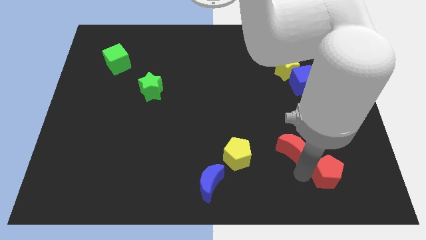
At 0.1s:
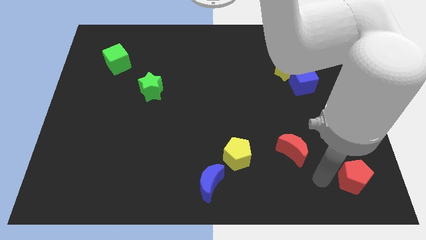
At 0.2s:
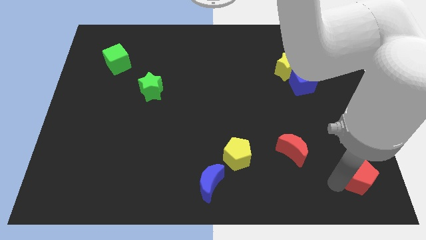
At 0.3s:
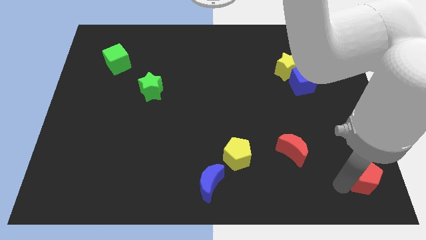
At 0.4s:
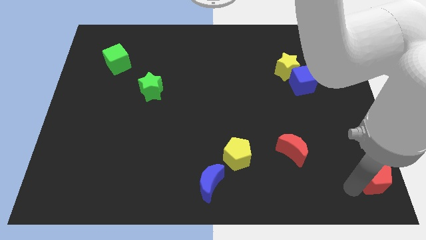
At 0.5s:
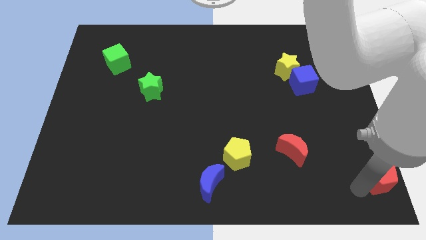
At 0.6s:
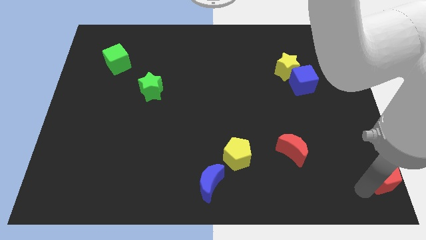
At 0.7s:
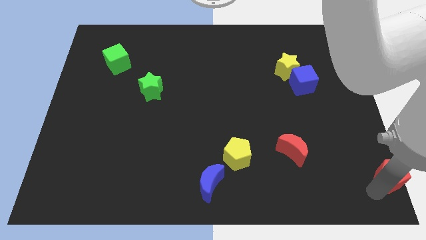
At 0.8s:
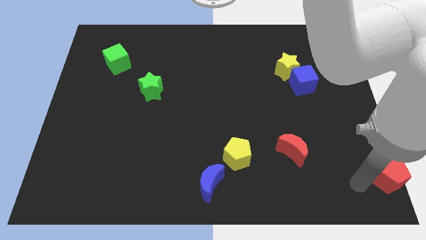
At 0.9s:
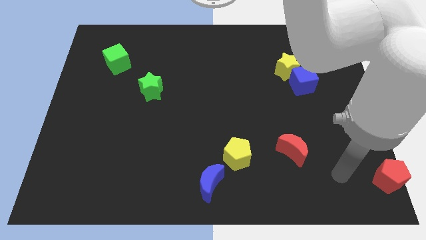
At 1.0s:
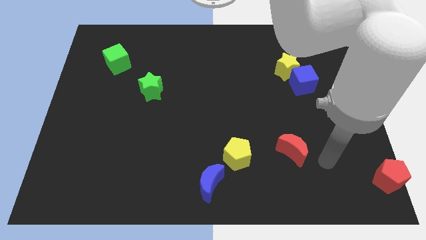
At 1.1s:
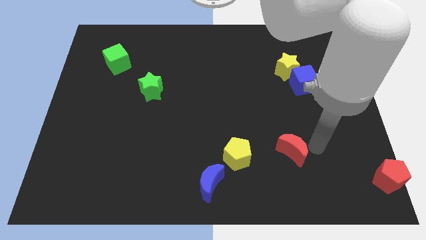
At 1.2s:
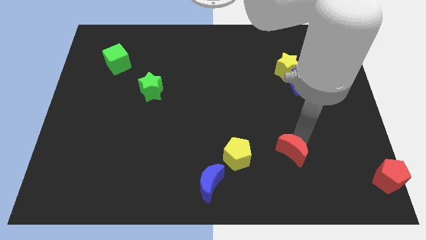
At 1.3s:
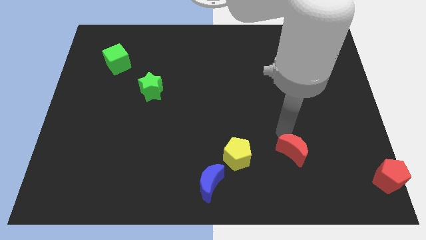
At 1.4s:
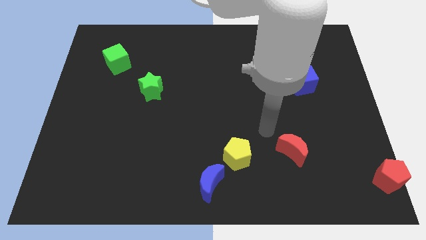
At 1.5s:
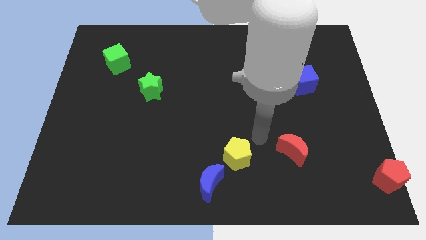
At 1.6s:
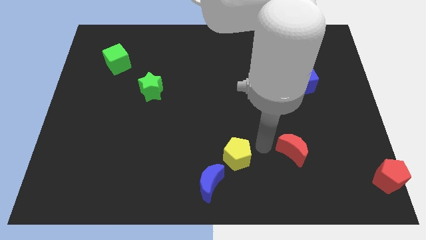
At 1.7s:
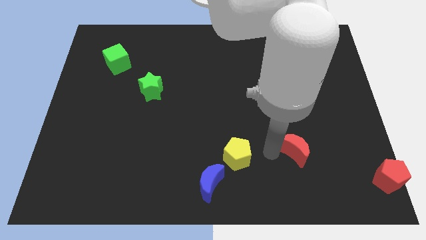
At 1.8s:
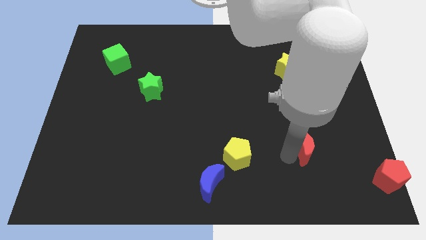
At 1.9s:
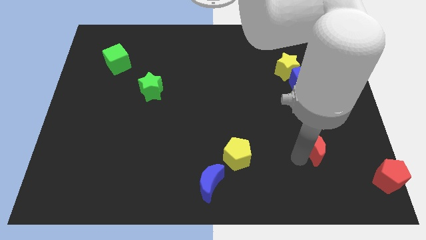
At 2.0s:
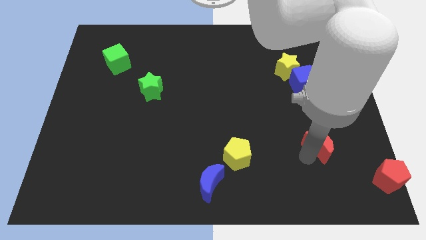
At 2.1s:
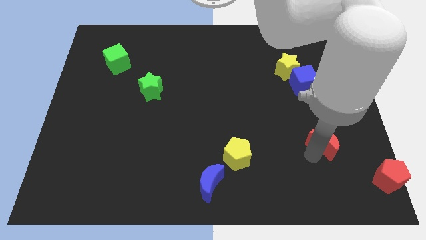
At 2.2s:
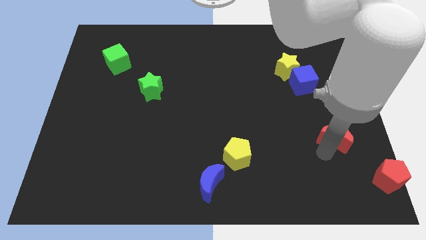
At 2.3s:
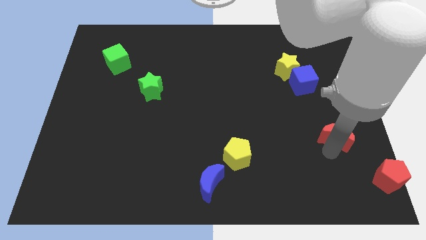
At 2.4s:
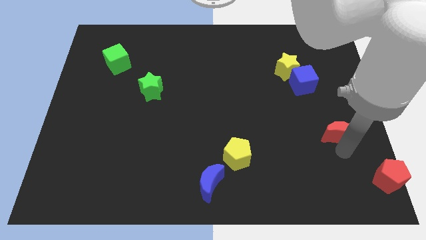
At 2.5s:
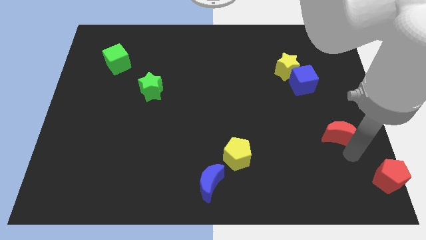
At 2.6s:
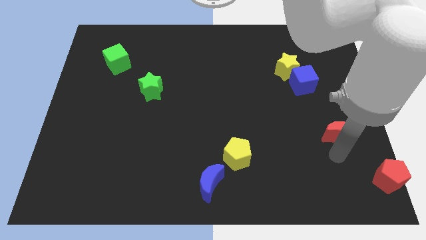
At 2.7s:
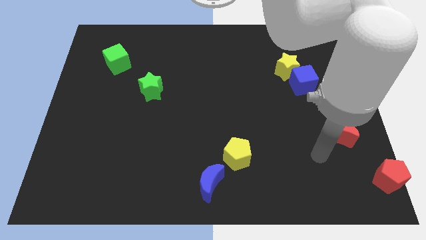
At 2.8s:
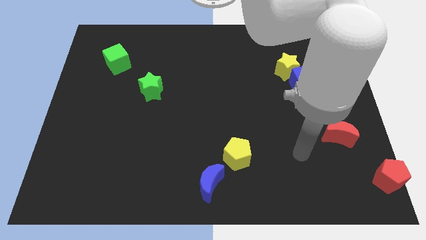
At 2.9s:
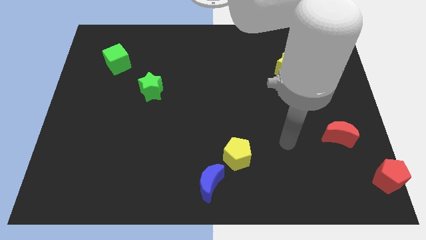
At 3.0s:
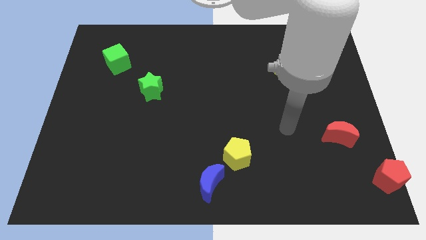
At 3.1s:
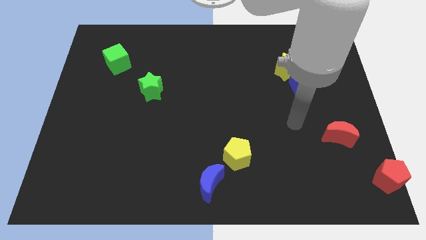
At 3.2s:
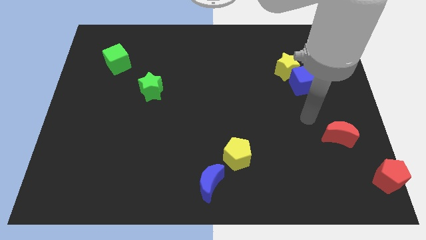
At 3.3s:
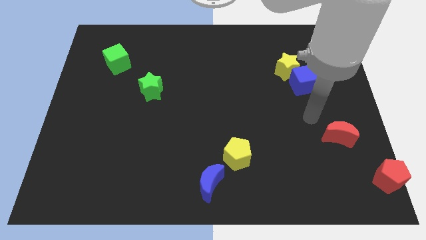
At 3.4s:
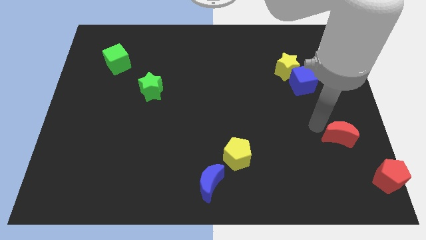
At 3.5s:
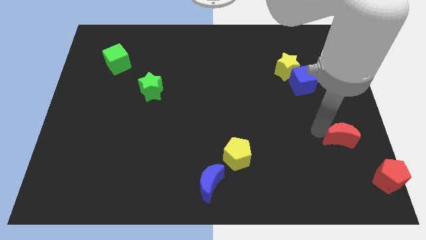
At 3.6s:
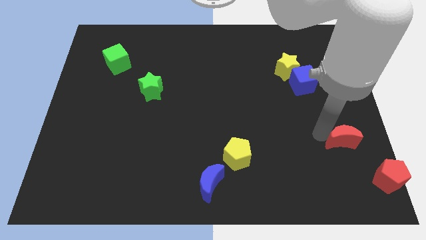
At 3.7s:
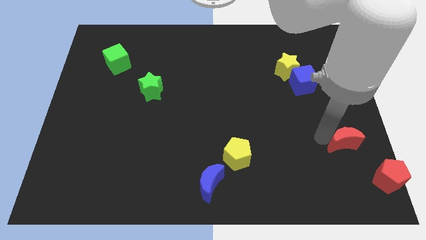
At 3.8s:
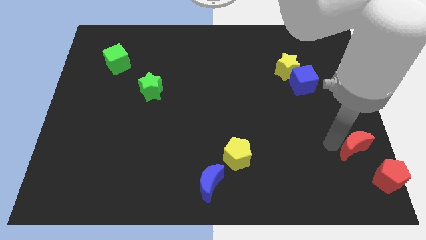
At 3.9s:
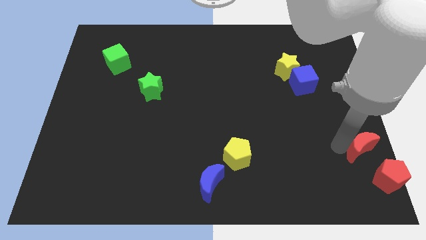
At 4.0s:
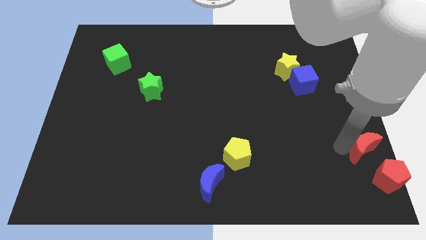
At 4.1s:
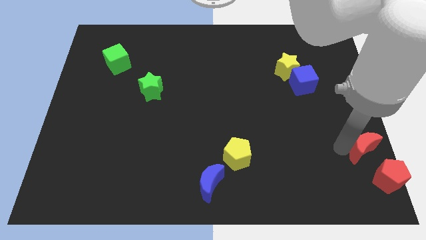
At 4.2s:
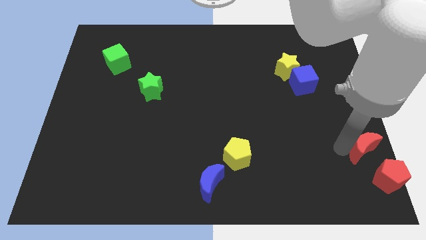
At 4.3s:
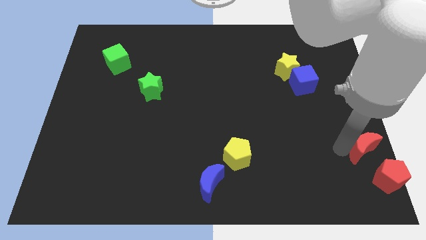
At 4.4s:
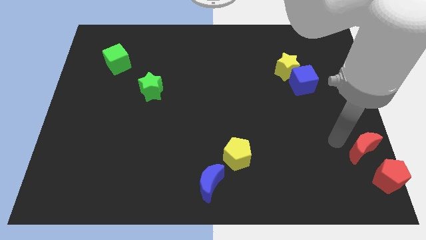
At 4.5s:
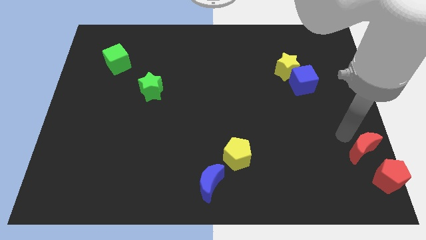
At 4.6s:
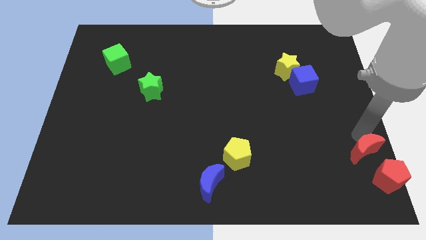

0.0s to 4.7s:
push the red blocks to the right

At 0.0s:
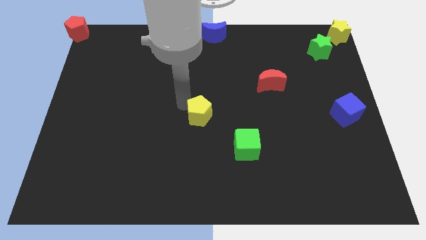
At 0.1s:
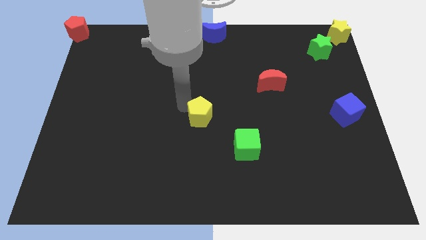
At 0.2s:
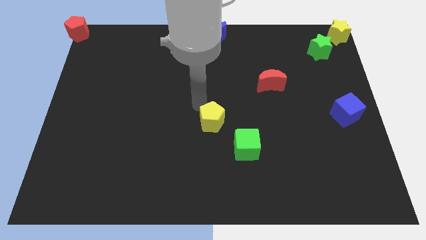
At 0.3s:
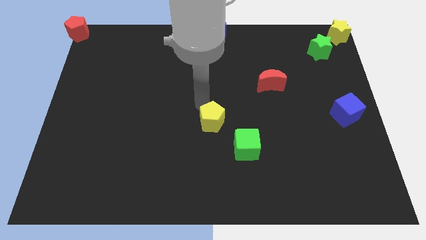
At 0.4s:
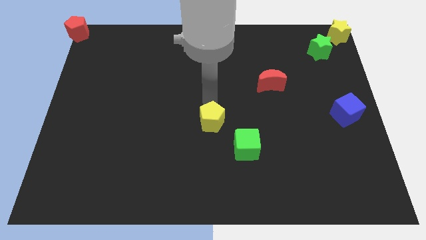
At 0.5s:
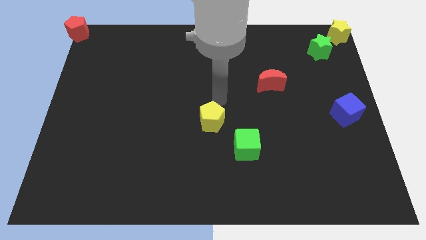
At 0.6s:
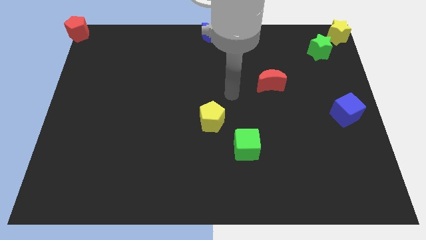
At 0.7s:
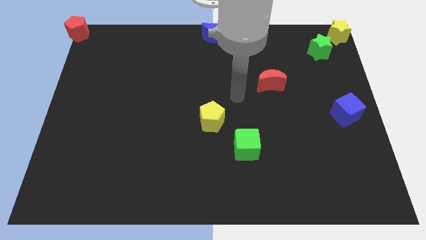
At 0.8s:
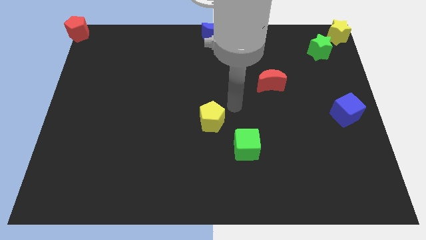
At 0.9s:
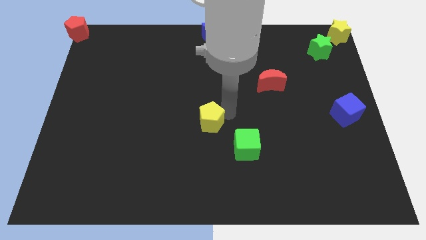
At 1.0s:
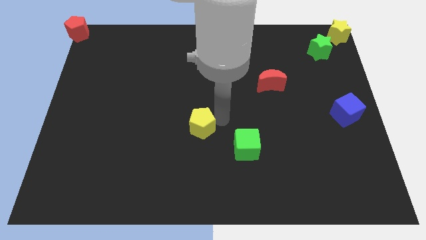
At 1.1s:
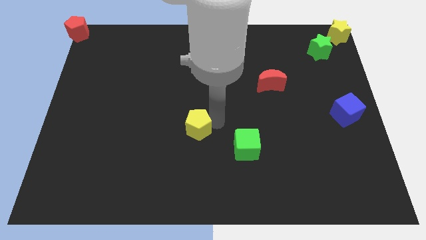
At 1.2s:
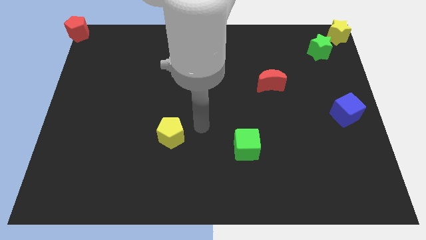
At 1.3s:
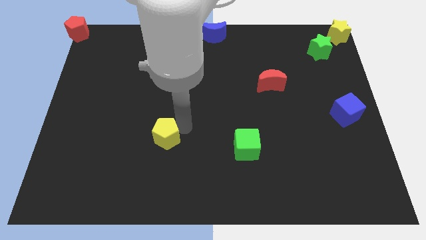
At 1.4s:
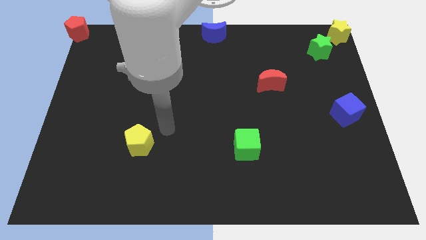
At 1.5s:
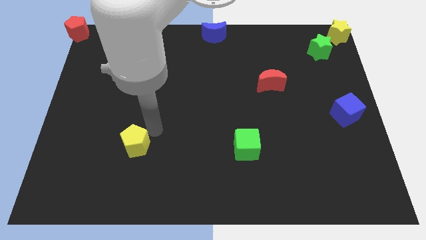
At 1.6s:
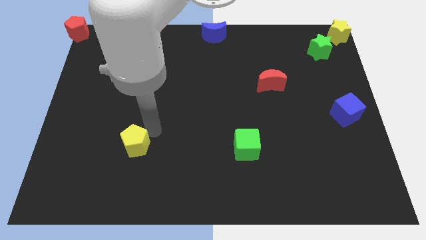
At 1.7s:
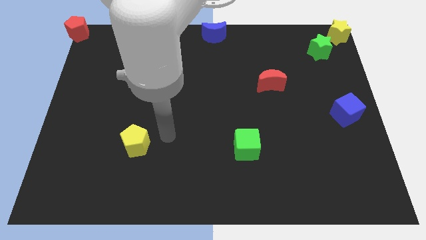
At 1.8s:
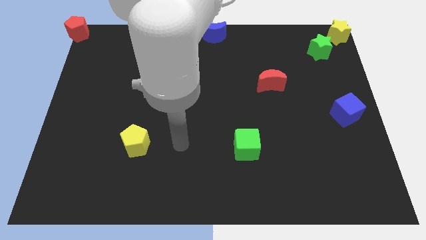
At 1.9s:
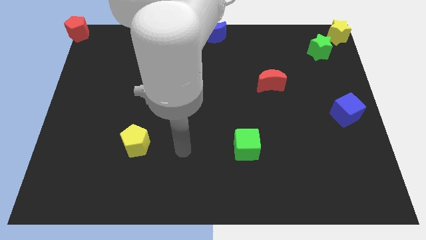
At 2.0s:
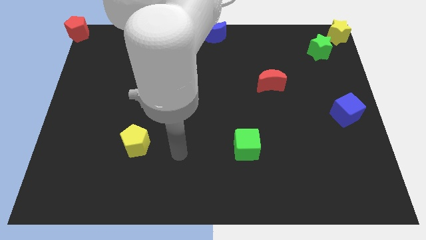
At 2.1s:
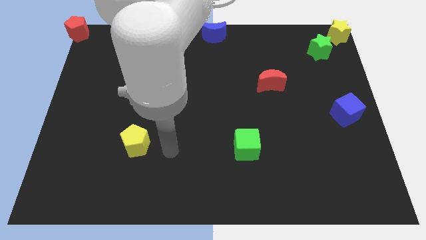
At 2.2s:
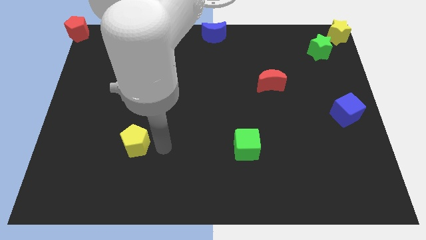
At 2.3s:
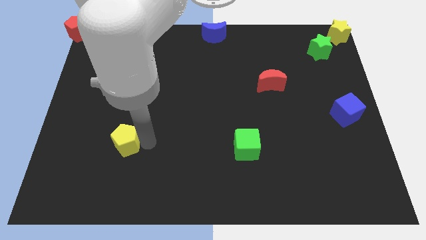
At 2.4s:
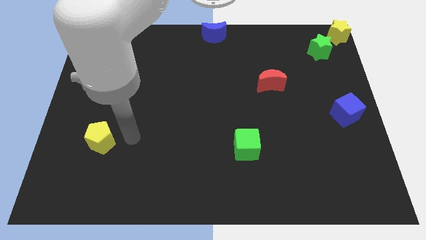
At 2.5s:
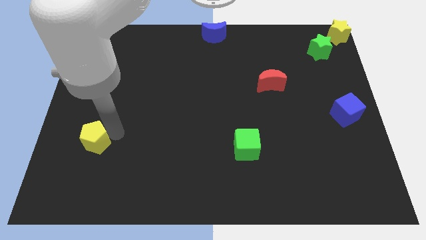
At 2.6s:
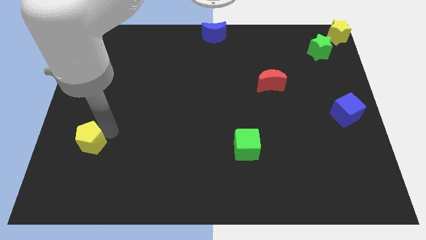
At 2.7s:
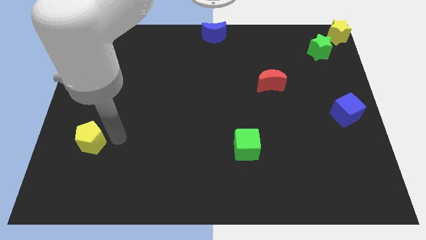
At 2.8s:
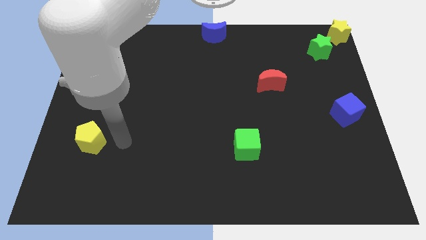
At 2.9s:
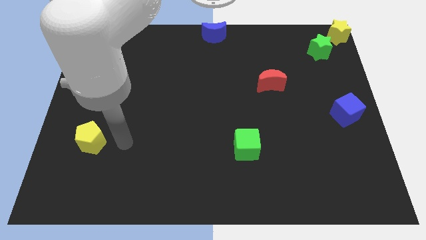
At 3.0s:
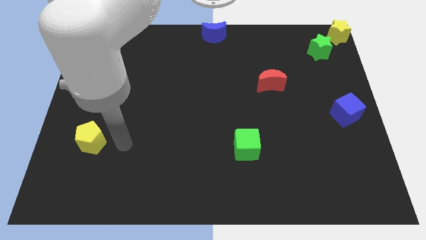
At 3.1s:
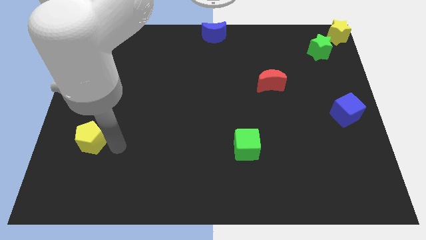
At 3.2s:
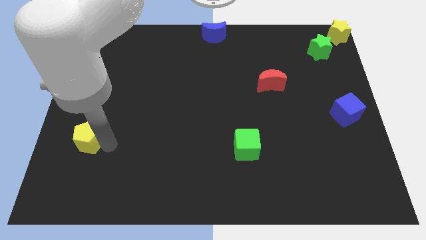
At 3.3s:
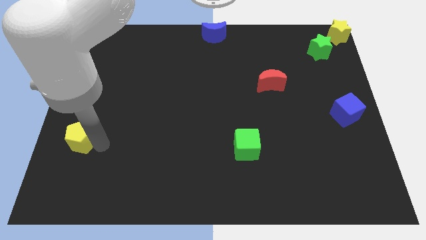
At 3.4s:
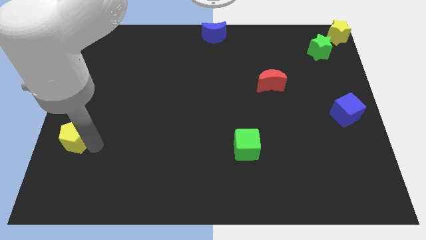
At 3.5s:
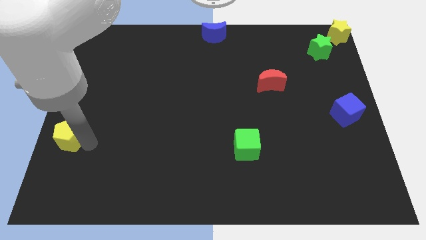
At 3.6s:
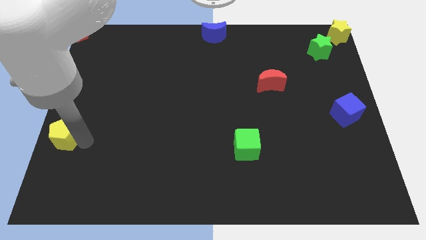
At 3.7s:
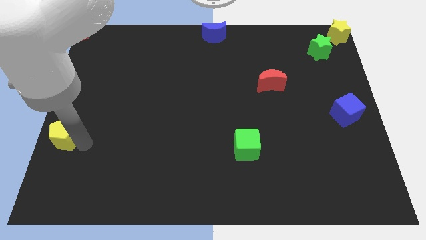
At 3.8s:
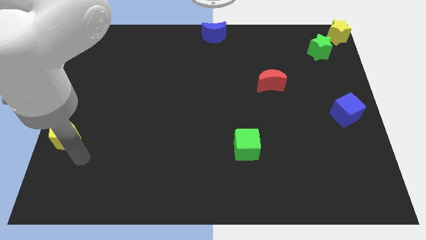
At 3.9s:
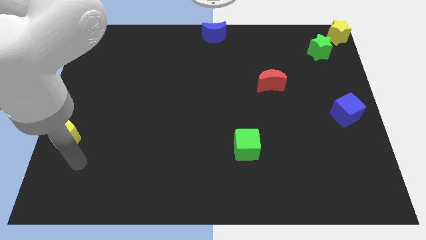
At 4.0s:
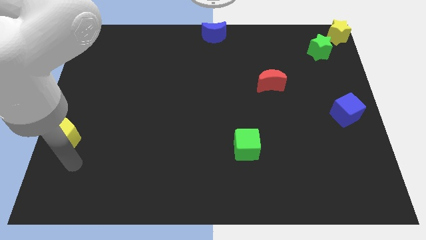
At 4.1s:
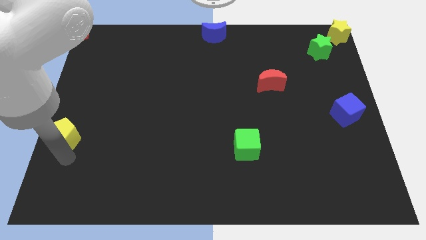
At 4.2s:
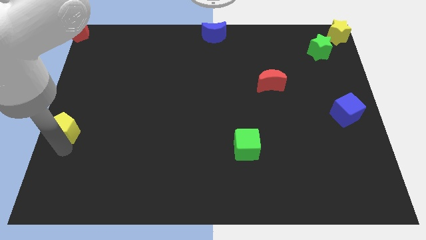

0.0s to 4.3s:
move yellow pentagon to the left of the board

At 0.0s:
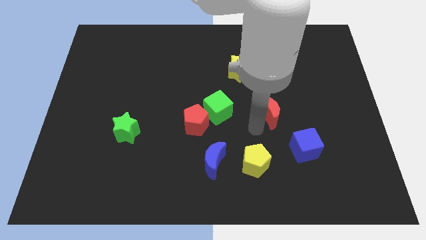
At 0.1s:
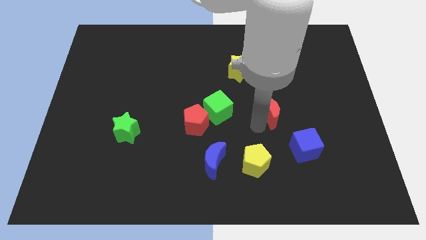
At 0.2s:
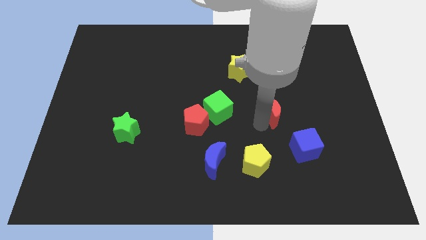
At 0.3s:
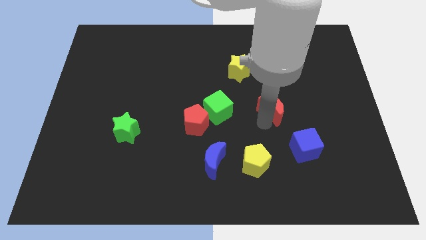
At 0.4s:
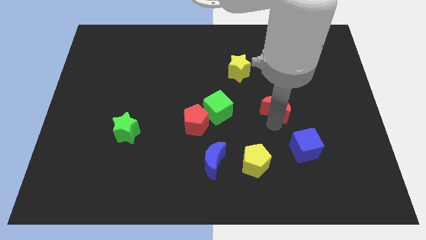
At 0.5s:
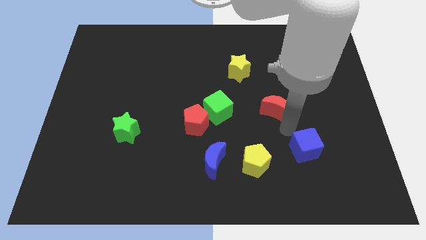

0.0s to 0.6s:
push the red moon slightly up
